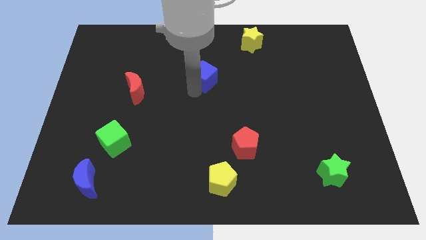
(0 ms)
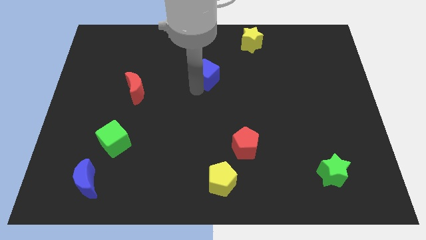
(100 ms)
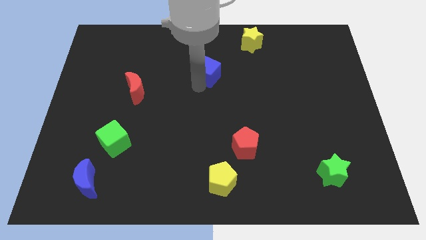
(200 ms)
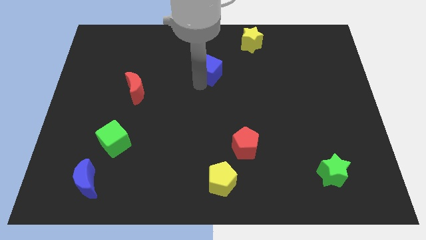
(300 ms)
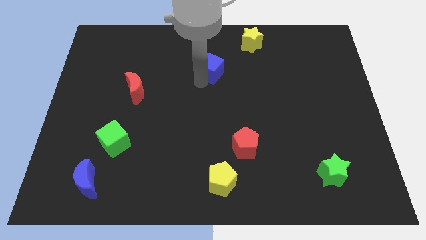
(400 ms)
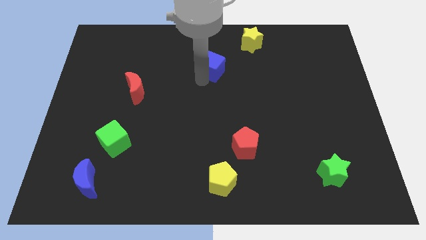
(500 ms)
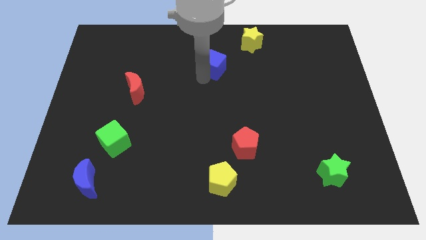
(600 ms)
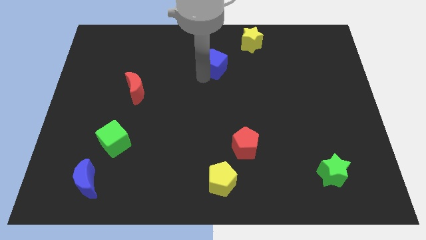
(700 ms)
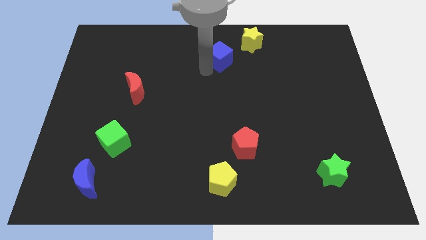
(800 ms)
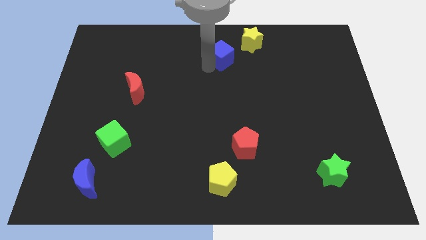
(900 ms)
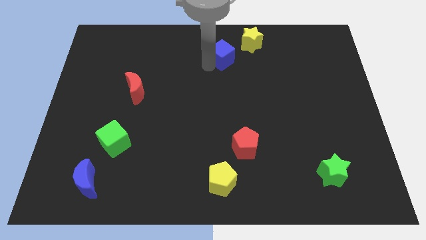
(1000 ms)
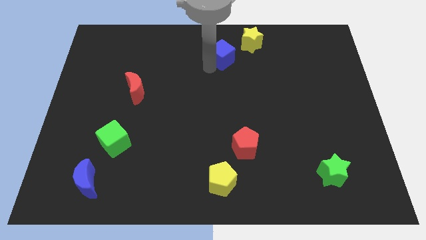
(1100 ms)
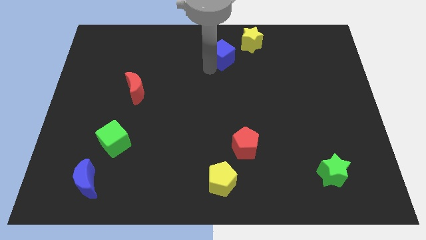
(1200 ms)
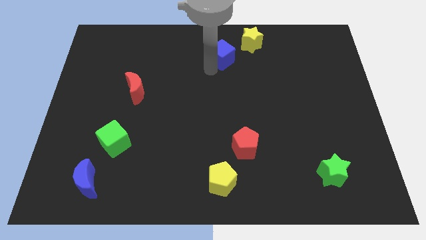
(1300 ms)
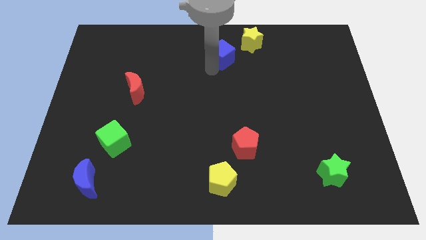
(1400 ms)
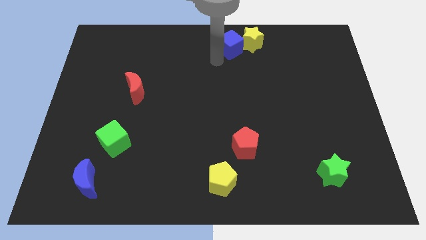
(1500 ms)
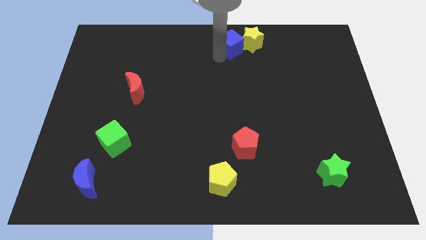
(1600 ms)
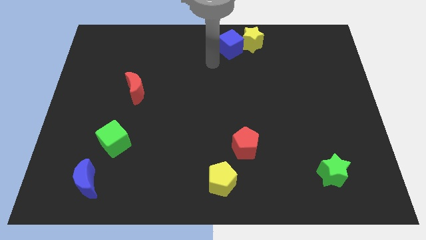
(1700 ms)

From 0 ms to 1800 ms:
push the blue cube diagonal left of yellow star

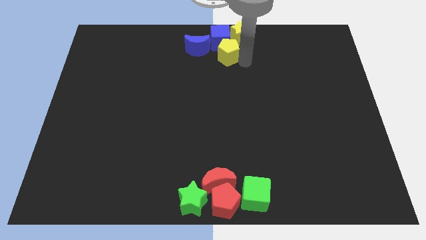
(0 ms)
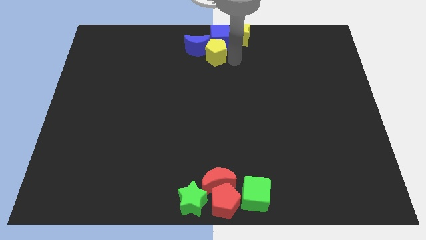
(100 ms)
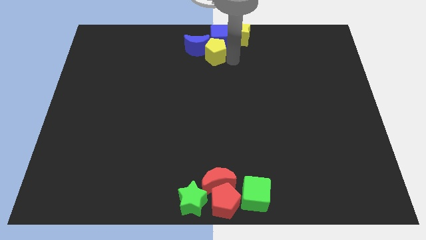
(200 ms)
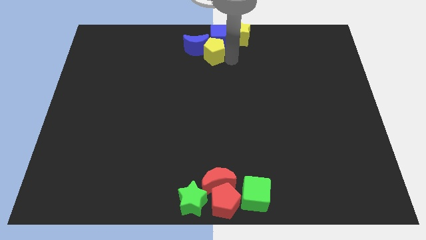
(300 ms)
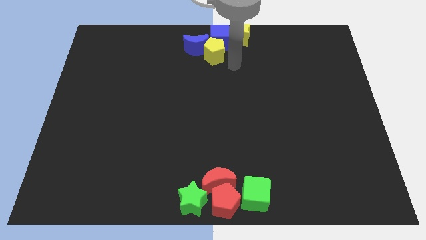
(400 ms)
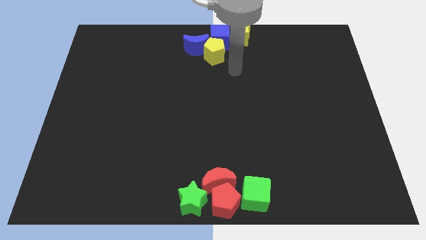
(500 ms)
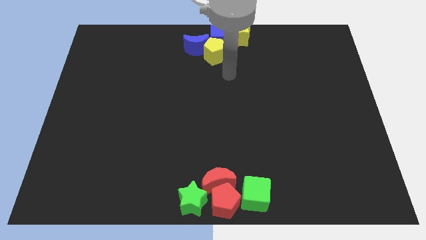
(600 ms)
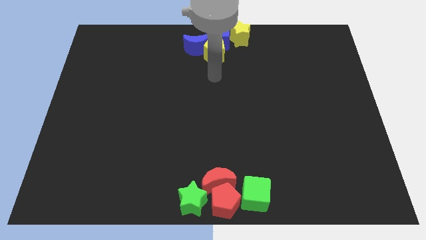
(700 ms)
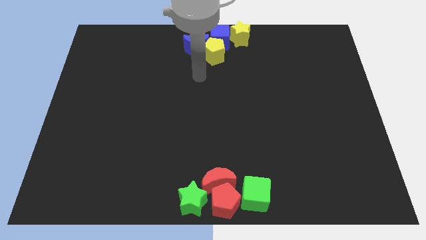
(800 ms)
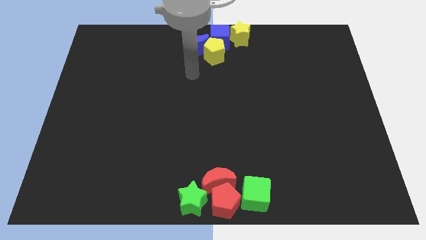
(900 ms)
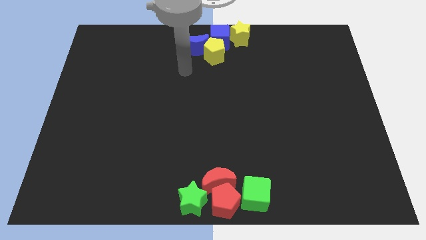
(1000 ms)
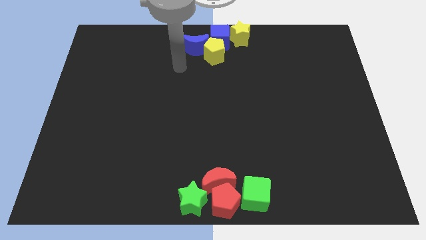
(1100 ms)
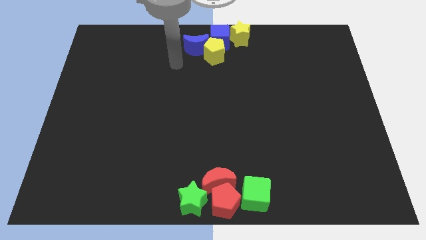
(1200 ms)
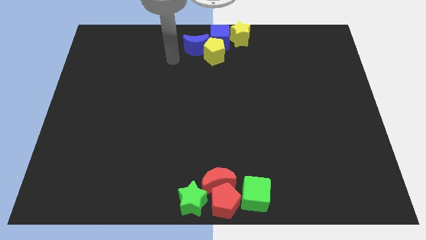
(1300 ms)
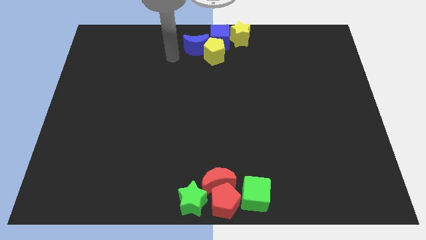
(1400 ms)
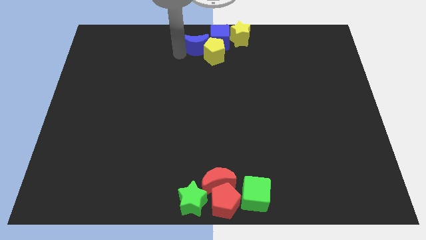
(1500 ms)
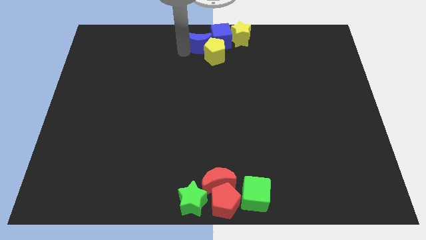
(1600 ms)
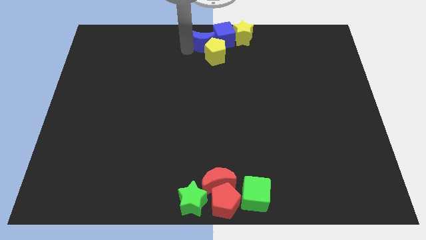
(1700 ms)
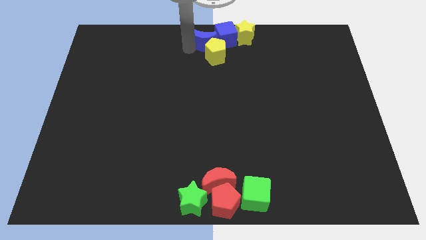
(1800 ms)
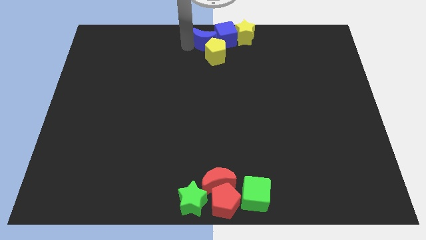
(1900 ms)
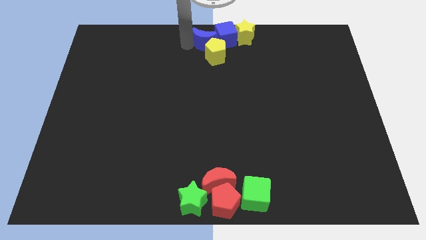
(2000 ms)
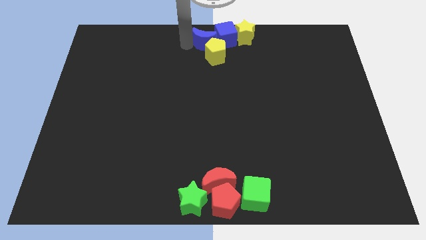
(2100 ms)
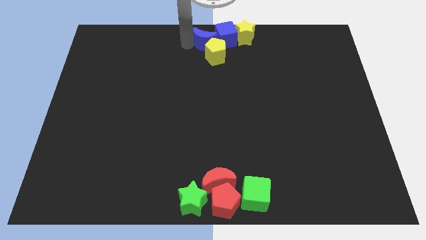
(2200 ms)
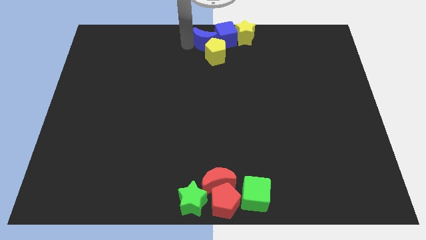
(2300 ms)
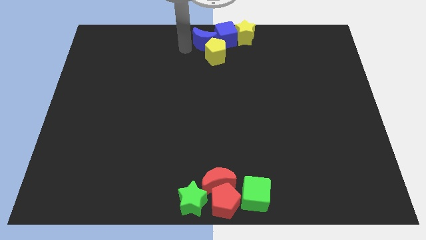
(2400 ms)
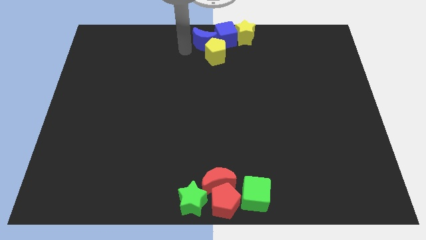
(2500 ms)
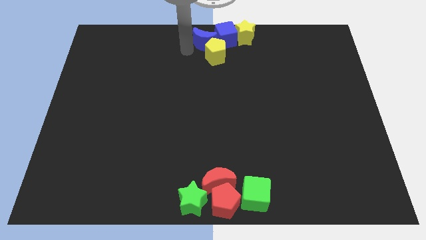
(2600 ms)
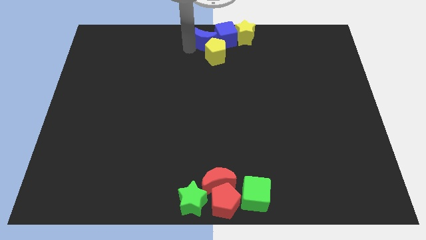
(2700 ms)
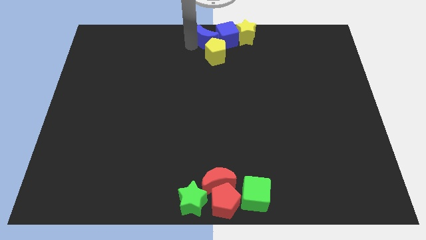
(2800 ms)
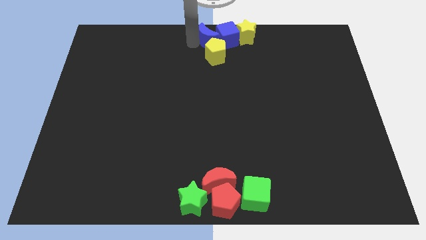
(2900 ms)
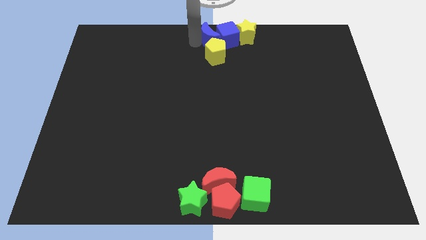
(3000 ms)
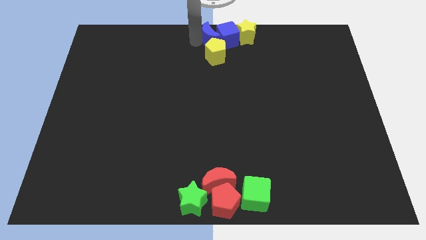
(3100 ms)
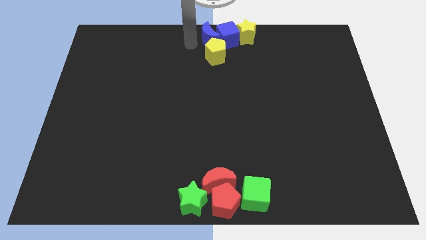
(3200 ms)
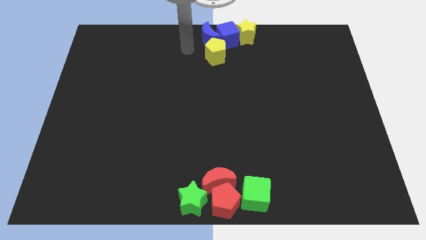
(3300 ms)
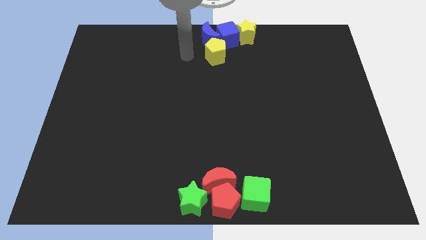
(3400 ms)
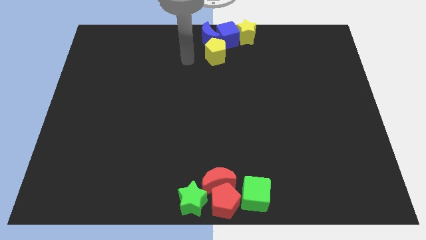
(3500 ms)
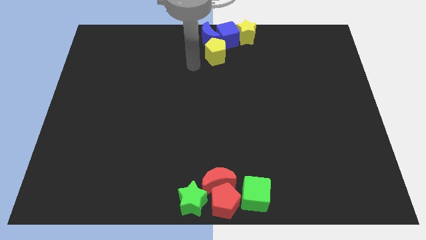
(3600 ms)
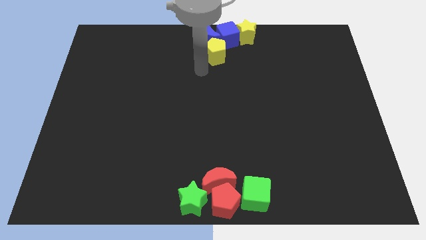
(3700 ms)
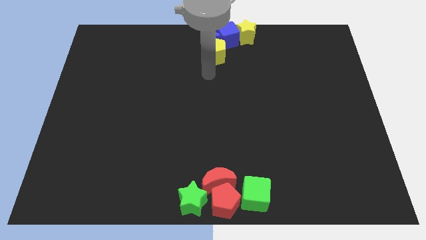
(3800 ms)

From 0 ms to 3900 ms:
push blue moon into group of blocks

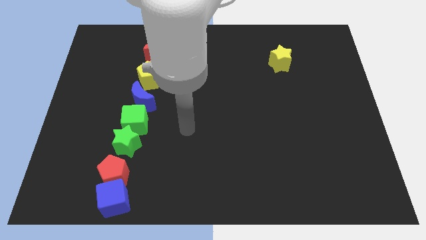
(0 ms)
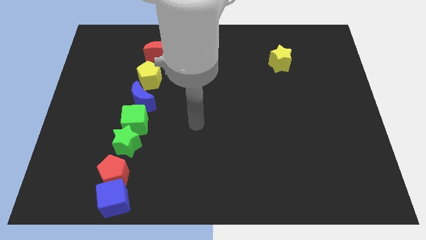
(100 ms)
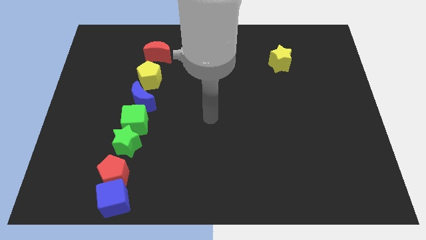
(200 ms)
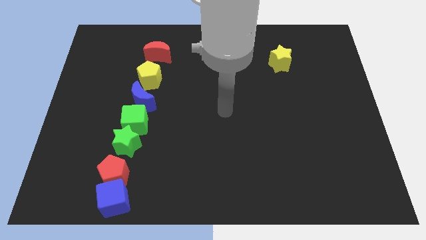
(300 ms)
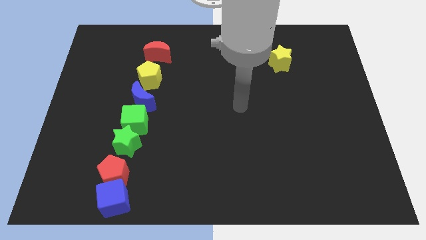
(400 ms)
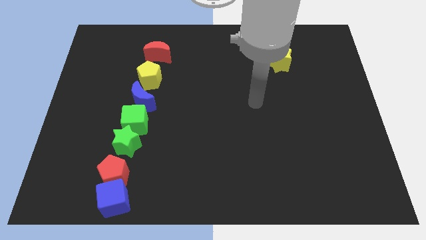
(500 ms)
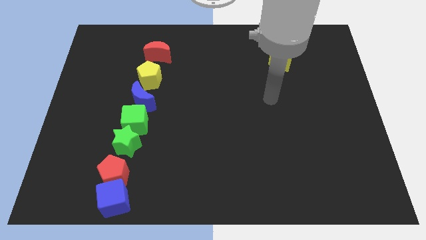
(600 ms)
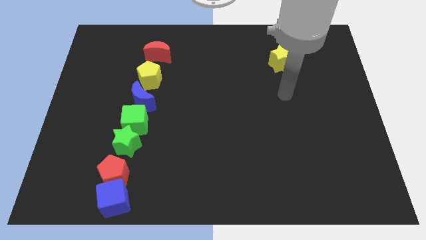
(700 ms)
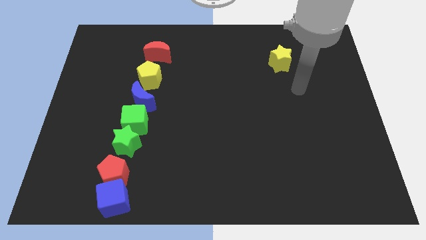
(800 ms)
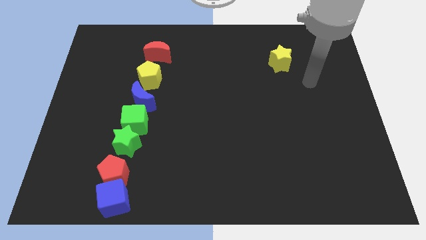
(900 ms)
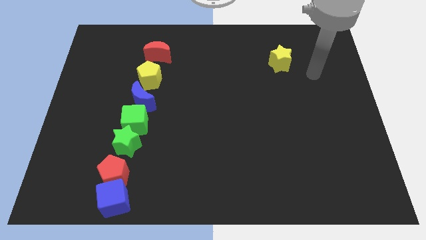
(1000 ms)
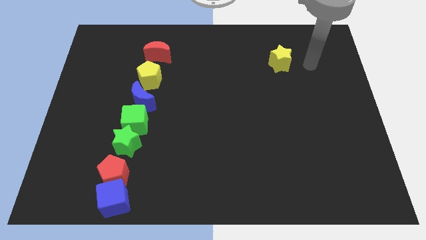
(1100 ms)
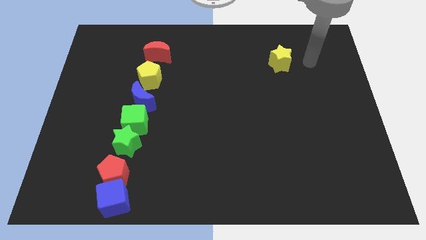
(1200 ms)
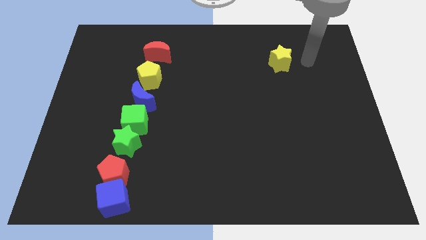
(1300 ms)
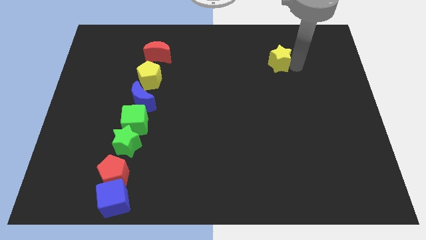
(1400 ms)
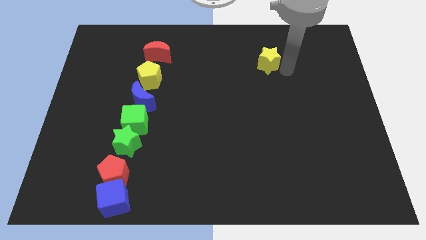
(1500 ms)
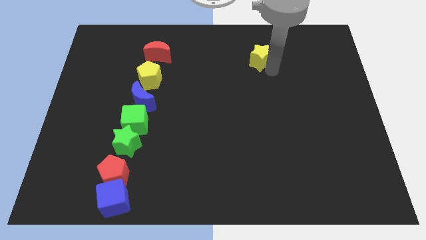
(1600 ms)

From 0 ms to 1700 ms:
move the yellow star to the slightly to the left

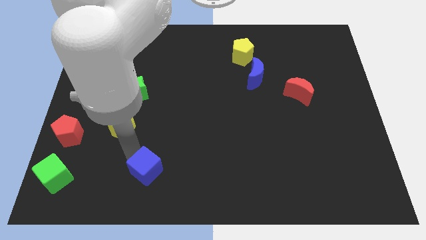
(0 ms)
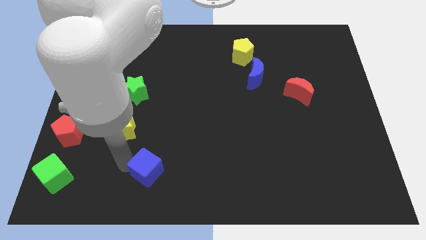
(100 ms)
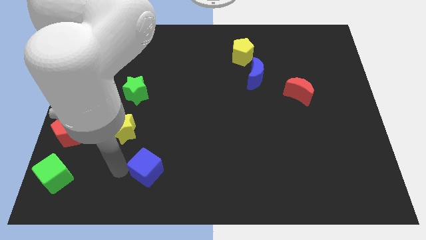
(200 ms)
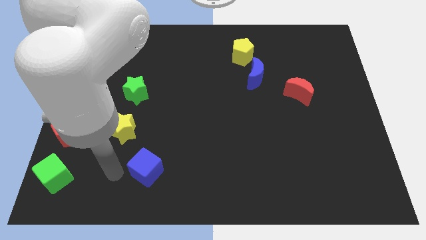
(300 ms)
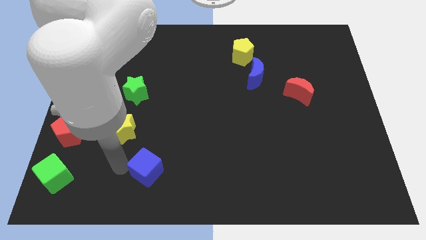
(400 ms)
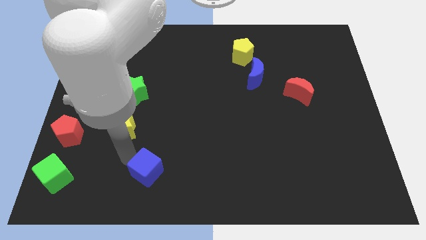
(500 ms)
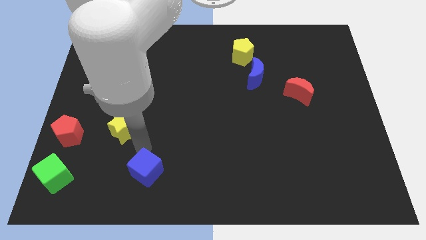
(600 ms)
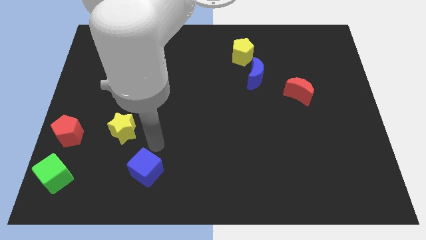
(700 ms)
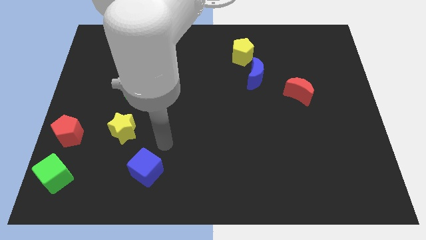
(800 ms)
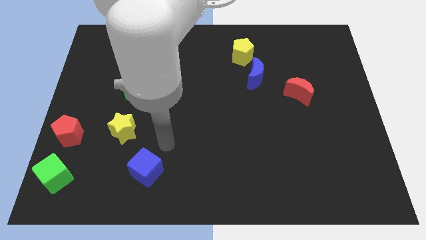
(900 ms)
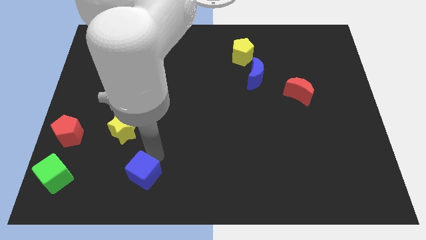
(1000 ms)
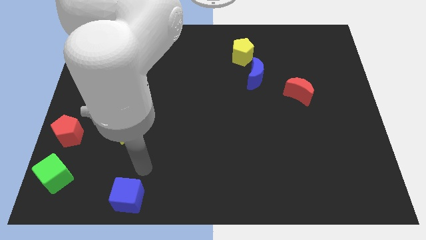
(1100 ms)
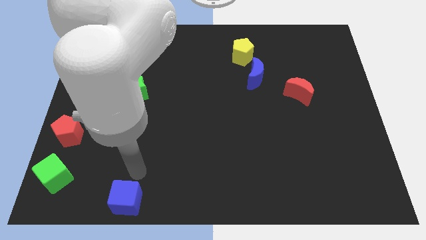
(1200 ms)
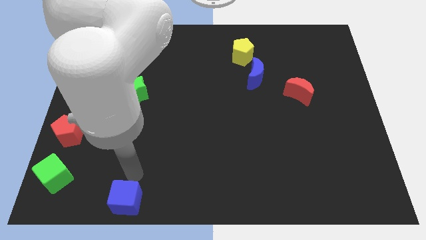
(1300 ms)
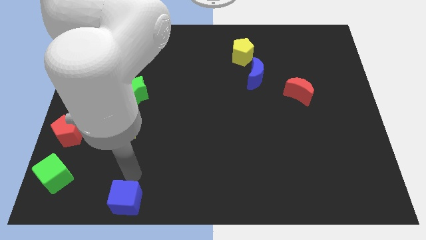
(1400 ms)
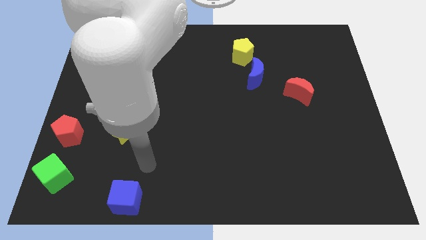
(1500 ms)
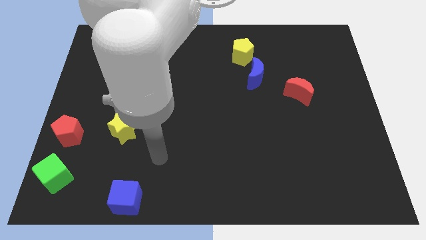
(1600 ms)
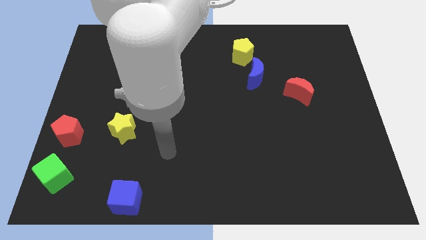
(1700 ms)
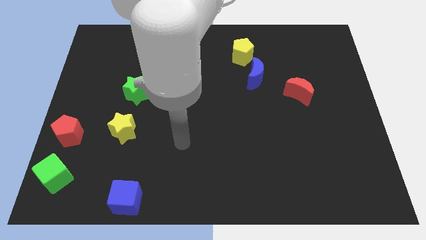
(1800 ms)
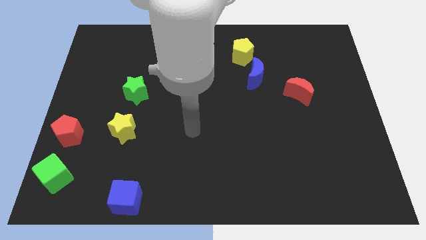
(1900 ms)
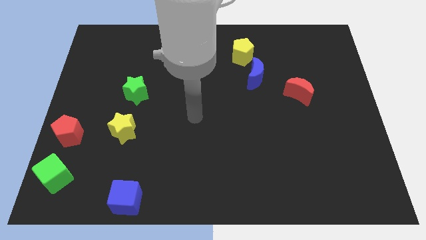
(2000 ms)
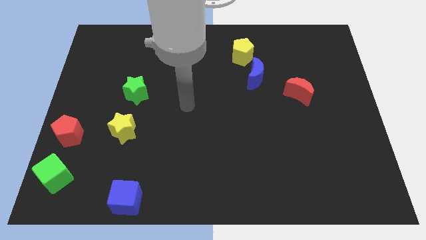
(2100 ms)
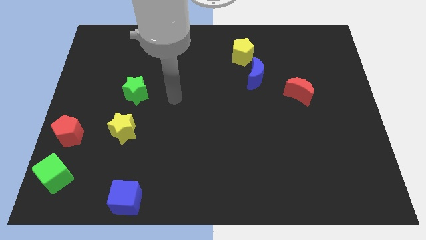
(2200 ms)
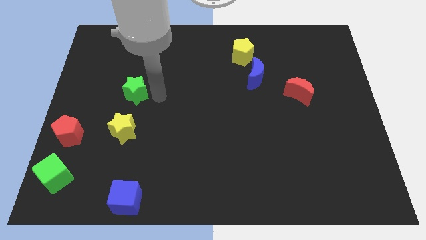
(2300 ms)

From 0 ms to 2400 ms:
move the blue cube to the bottom of the board
